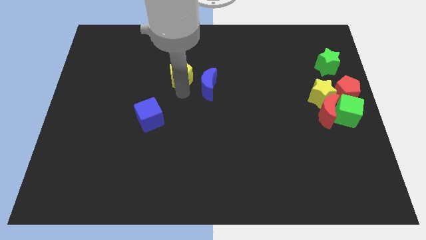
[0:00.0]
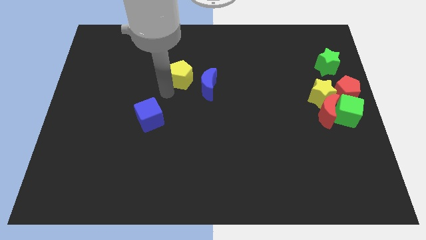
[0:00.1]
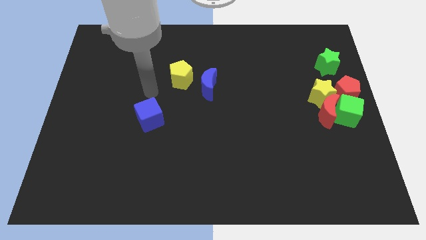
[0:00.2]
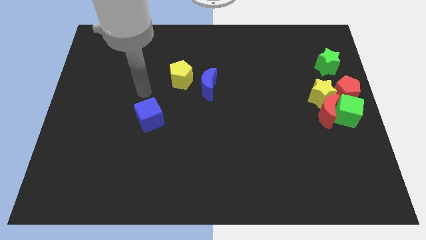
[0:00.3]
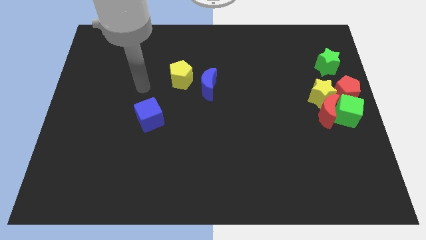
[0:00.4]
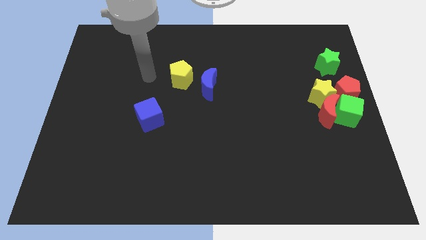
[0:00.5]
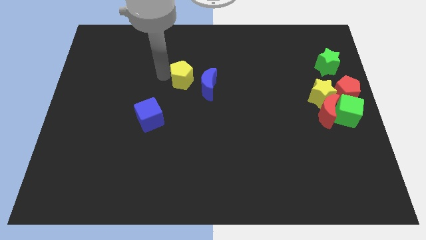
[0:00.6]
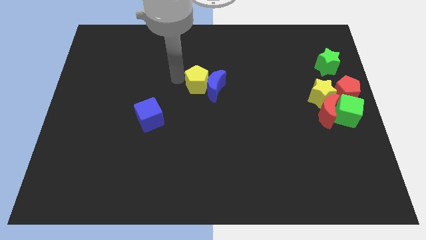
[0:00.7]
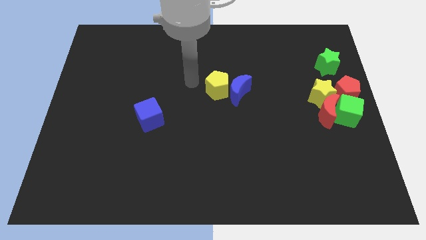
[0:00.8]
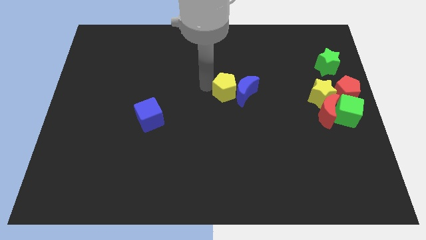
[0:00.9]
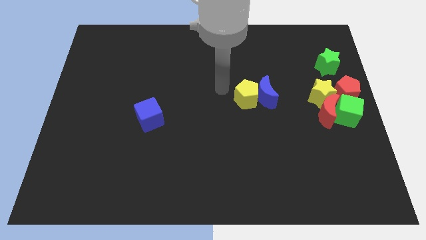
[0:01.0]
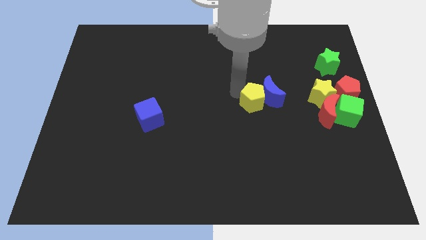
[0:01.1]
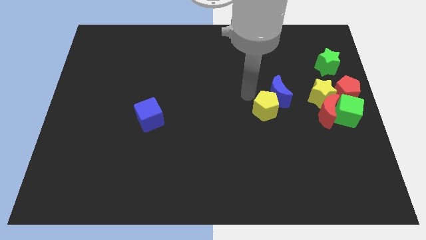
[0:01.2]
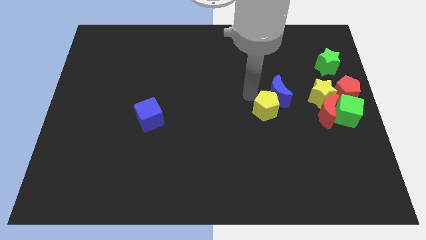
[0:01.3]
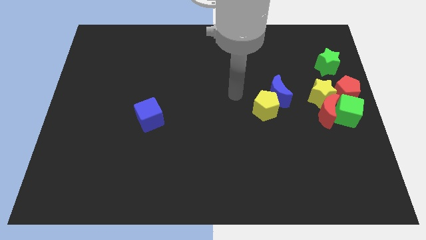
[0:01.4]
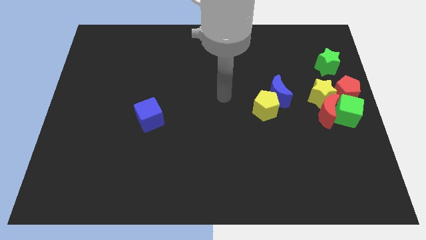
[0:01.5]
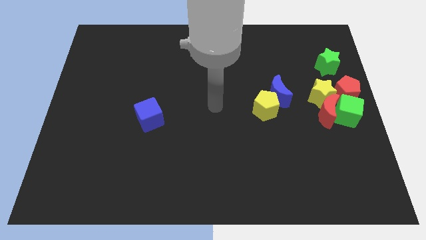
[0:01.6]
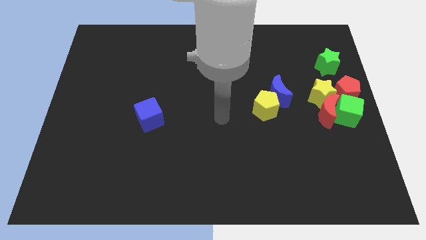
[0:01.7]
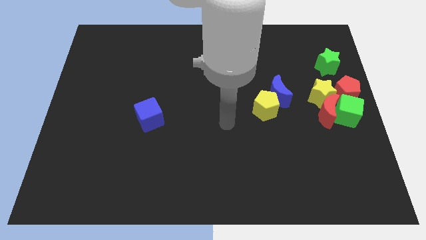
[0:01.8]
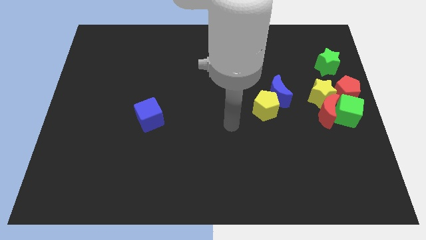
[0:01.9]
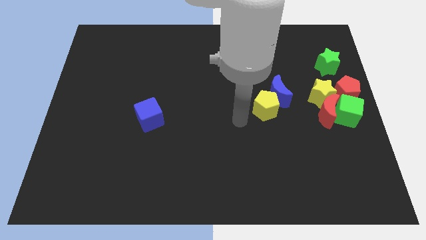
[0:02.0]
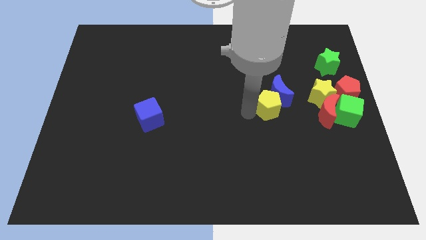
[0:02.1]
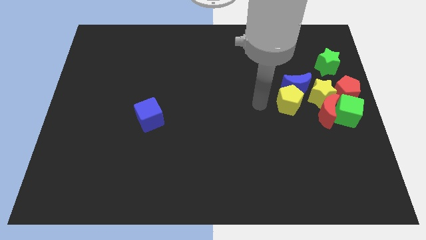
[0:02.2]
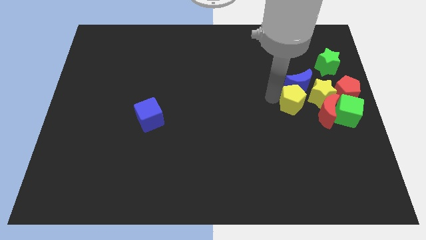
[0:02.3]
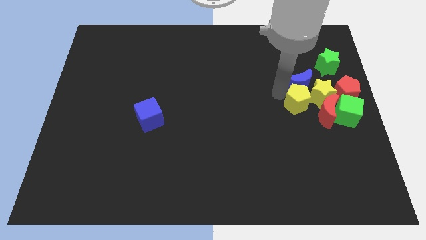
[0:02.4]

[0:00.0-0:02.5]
move the yellow pentagon into the blue crescent

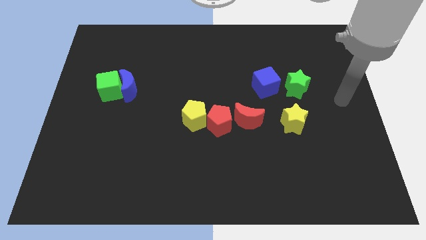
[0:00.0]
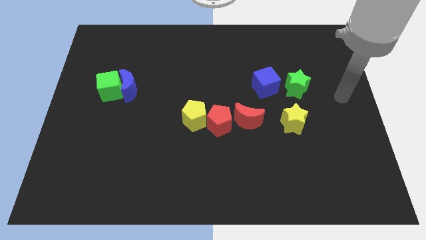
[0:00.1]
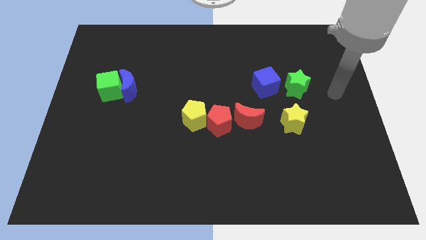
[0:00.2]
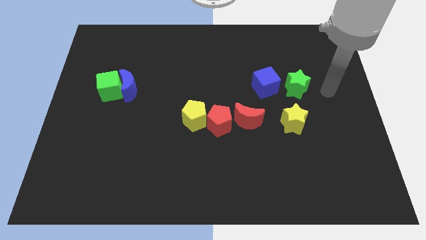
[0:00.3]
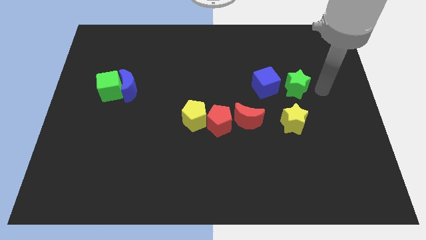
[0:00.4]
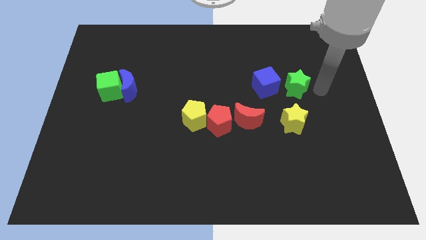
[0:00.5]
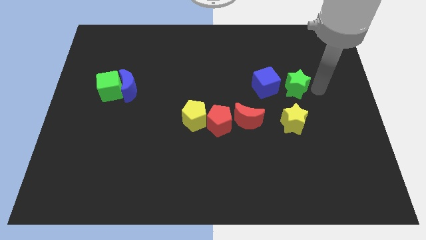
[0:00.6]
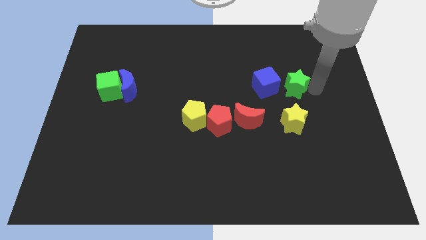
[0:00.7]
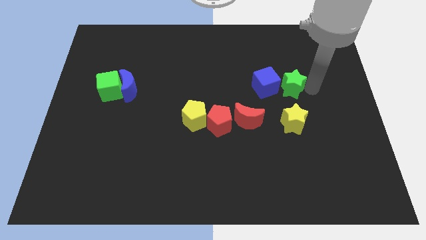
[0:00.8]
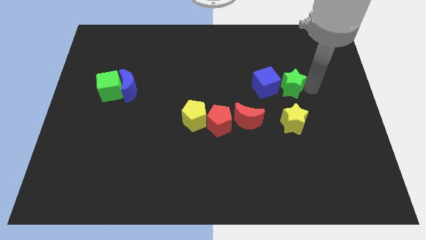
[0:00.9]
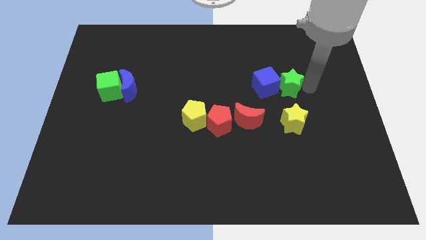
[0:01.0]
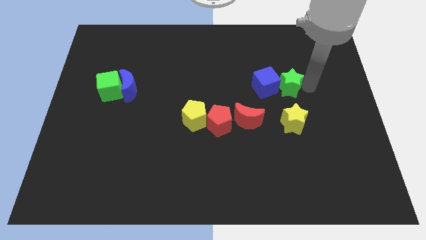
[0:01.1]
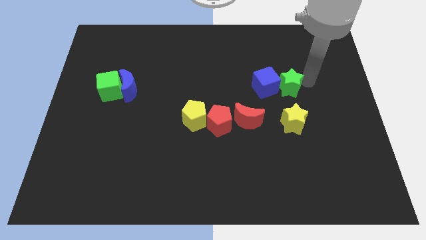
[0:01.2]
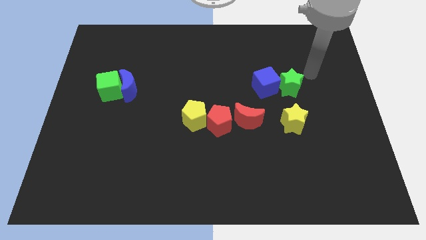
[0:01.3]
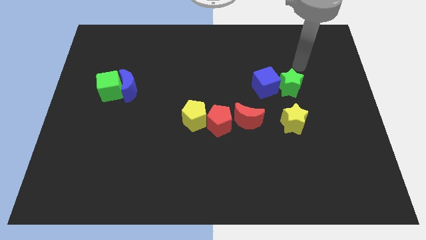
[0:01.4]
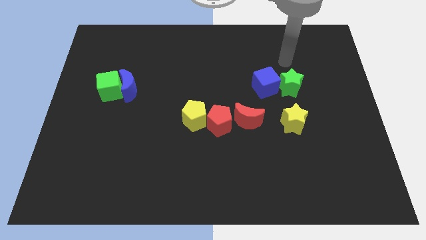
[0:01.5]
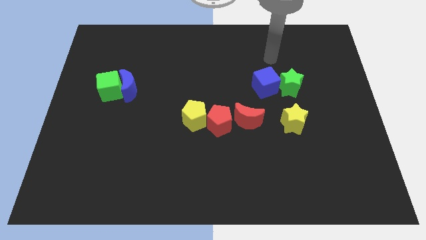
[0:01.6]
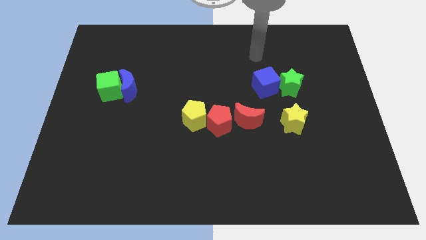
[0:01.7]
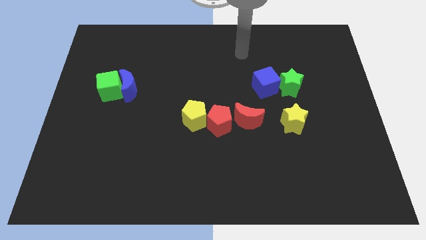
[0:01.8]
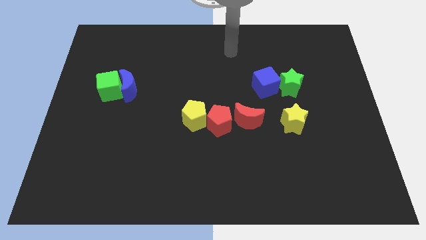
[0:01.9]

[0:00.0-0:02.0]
push the green star into the blue cube

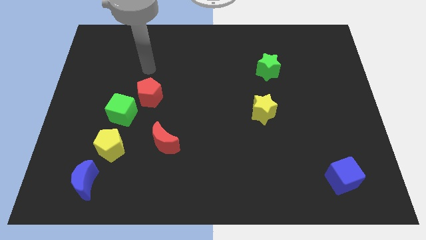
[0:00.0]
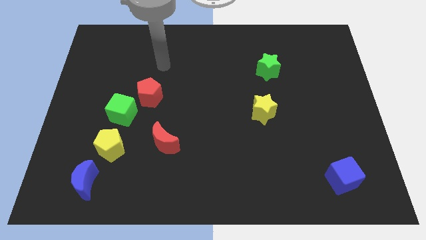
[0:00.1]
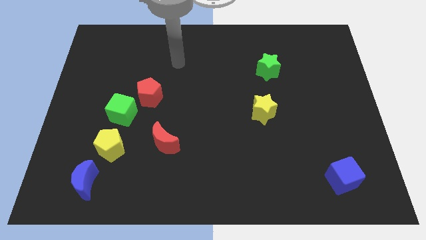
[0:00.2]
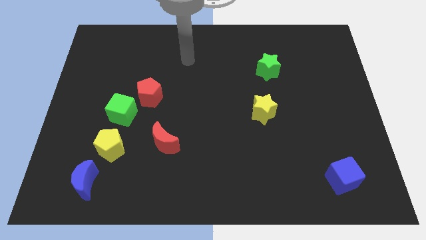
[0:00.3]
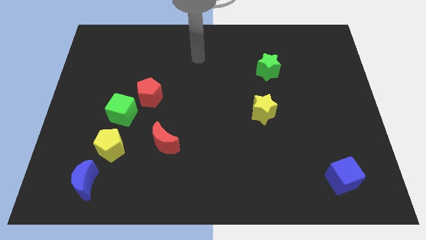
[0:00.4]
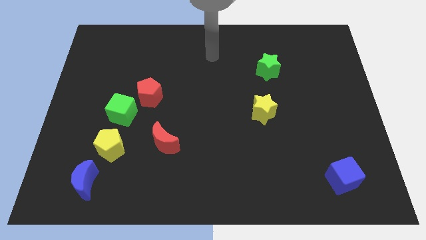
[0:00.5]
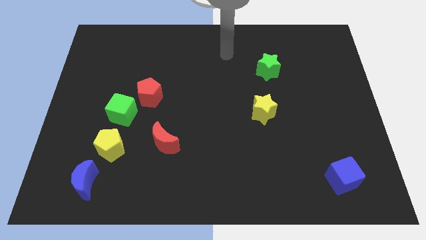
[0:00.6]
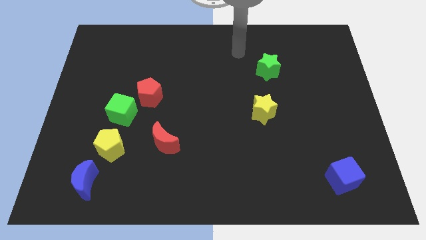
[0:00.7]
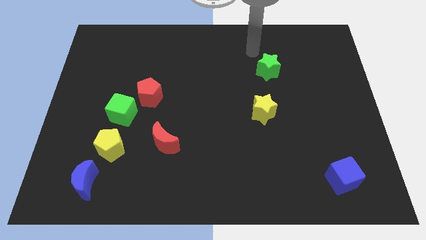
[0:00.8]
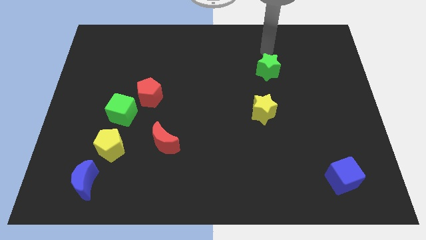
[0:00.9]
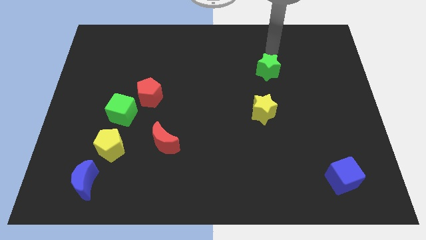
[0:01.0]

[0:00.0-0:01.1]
place your arm at the top of the green star

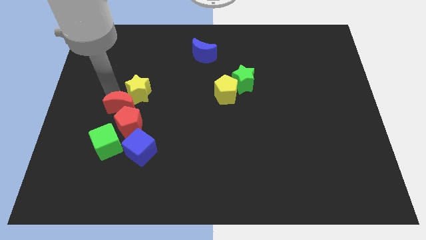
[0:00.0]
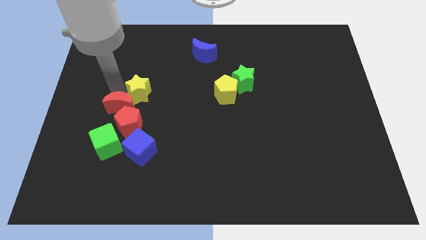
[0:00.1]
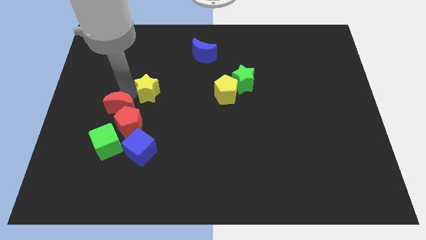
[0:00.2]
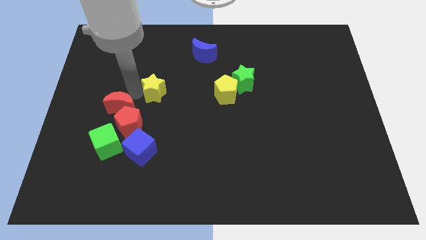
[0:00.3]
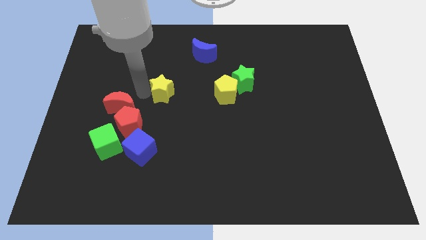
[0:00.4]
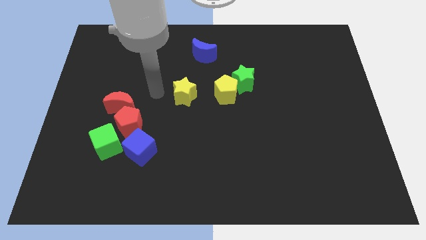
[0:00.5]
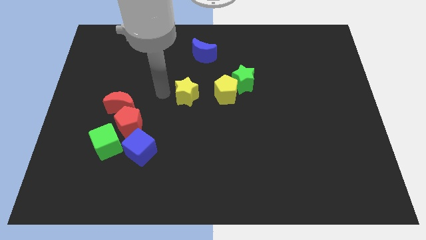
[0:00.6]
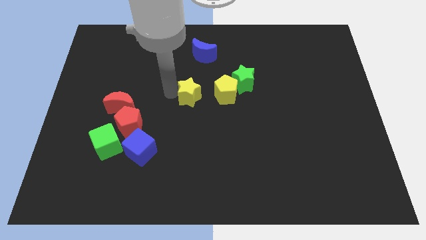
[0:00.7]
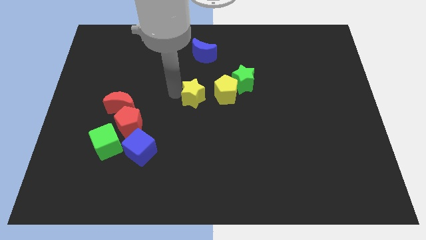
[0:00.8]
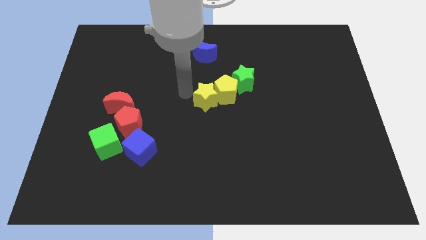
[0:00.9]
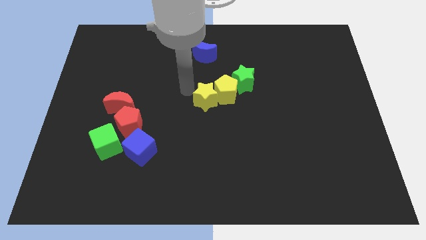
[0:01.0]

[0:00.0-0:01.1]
place the yellow star left to the yellow pentagon

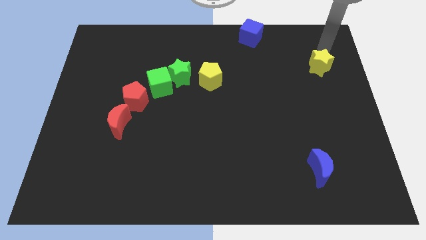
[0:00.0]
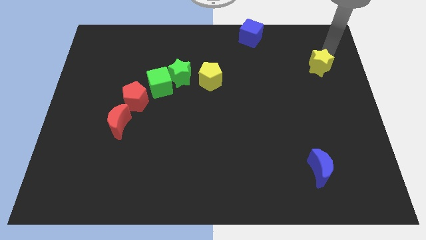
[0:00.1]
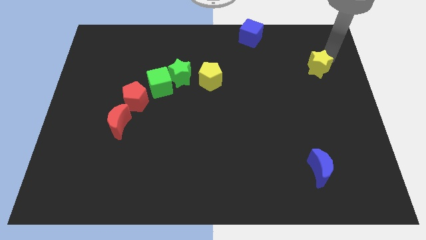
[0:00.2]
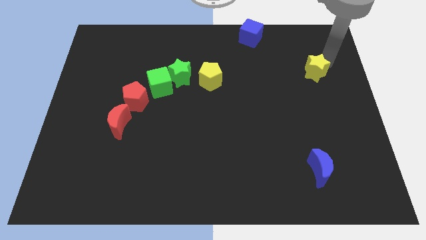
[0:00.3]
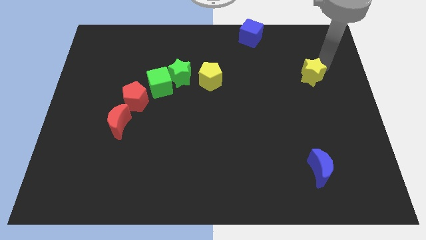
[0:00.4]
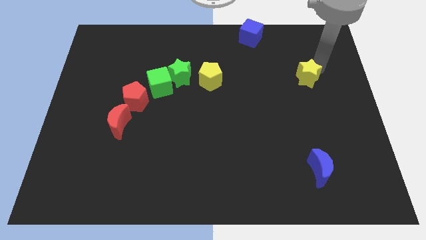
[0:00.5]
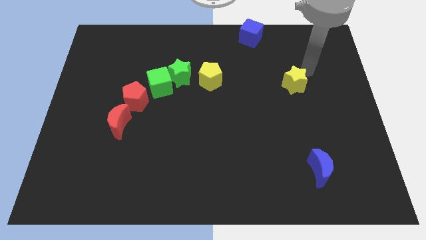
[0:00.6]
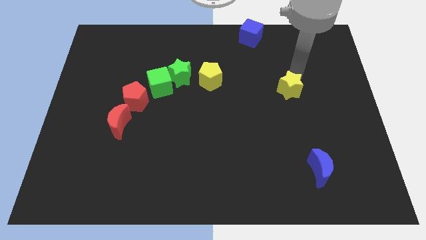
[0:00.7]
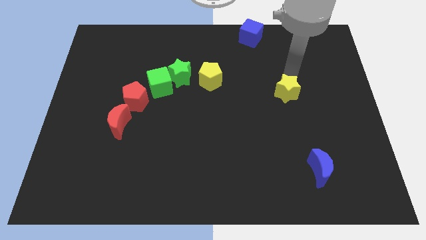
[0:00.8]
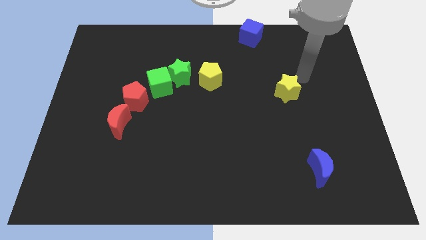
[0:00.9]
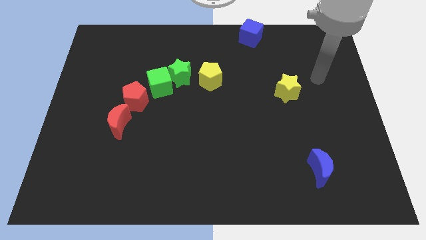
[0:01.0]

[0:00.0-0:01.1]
slightly push the yellow star to the bottom left to the board

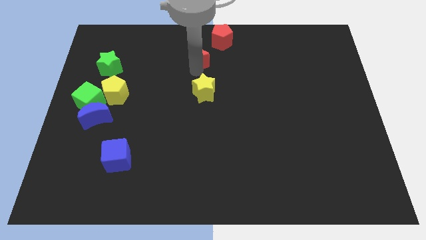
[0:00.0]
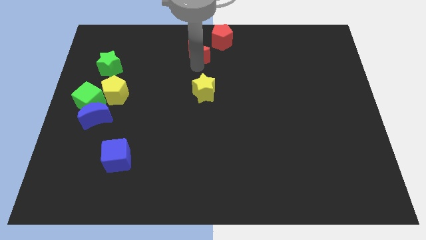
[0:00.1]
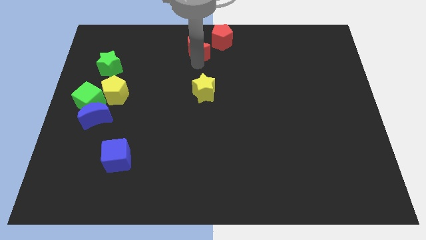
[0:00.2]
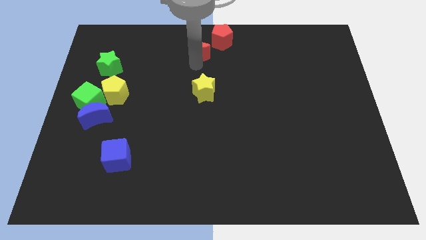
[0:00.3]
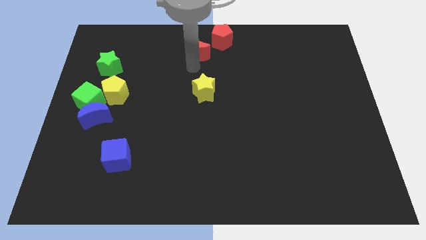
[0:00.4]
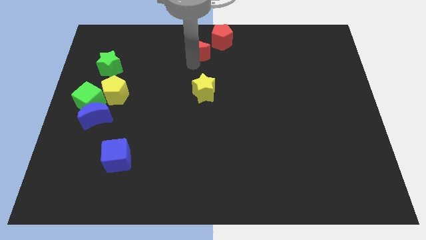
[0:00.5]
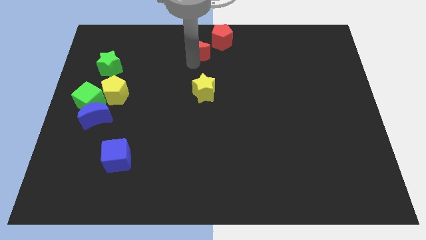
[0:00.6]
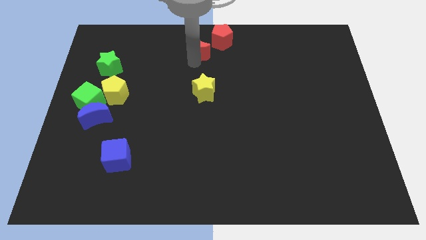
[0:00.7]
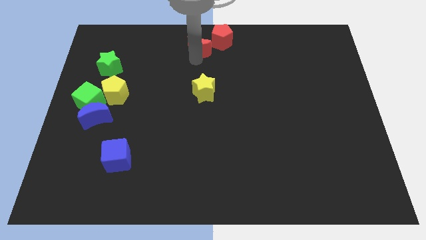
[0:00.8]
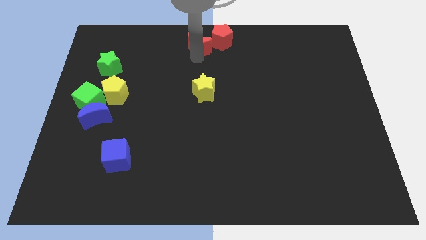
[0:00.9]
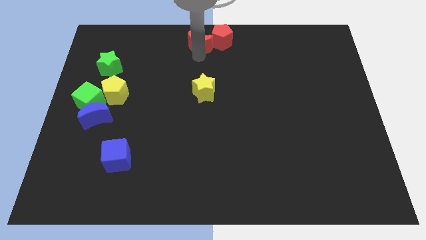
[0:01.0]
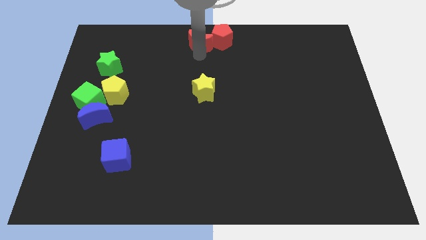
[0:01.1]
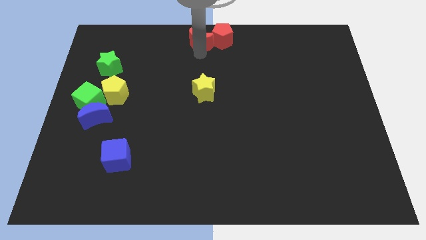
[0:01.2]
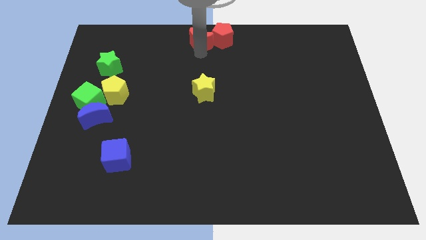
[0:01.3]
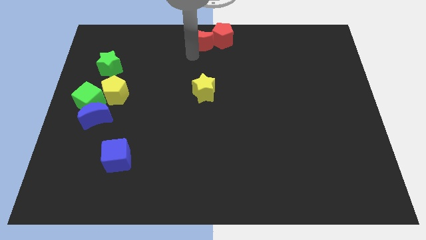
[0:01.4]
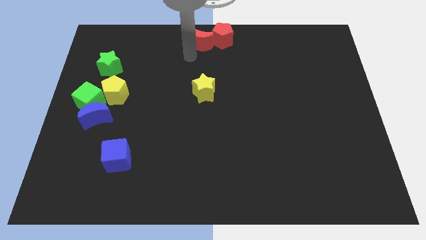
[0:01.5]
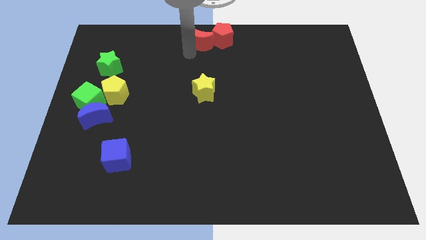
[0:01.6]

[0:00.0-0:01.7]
move the red crescent to the left of the red pentagon
